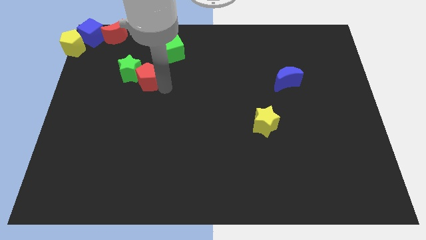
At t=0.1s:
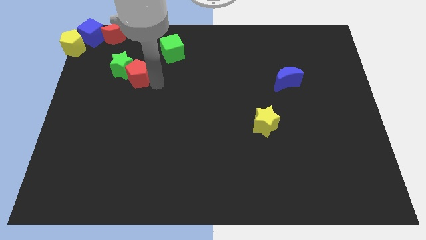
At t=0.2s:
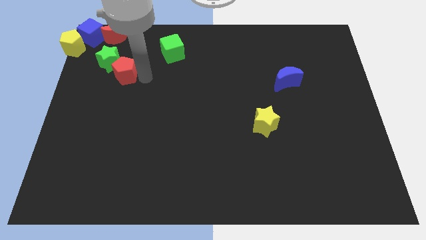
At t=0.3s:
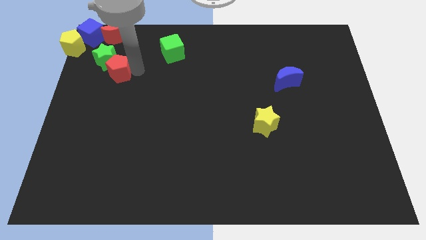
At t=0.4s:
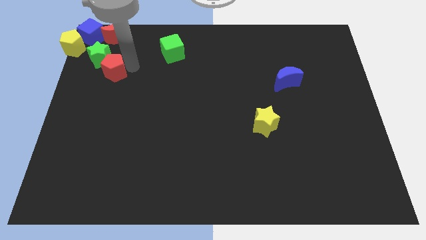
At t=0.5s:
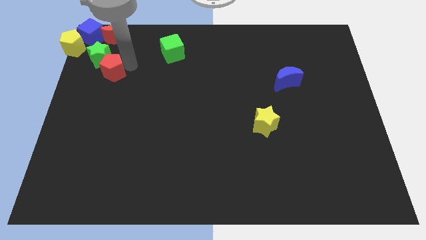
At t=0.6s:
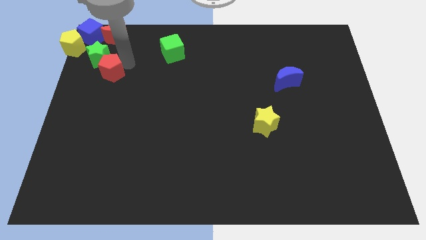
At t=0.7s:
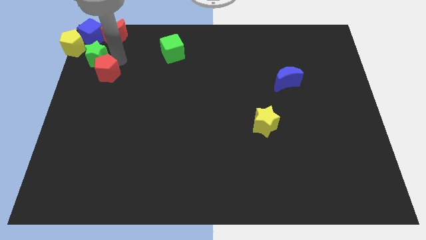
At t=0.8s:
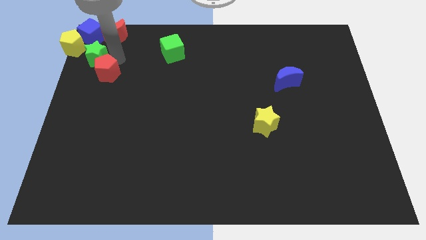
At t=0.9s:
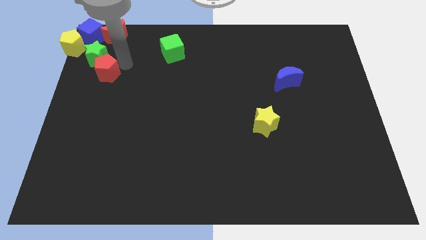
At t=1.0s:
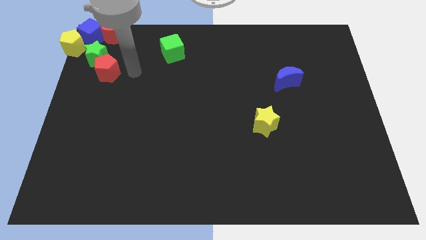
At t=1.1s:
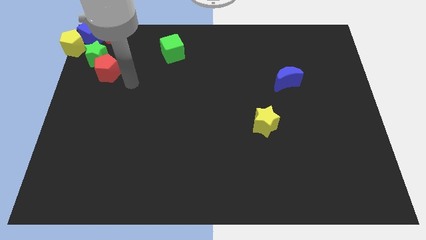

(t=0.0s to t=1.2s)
move the green star with the red pentagon towards the top left of the board

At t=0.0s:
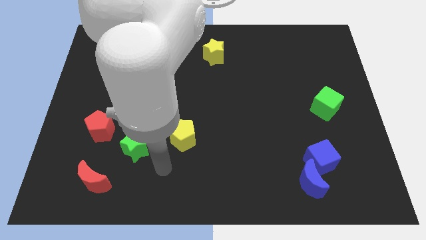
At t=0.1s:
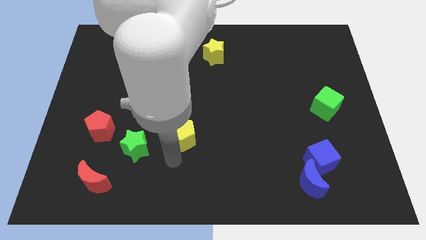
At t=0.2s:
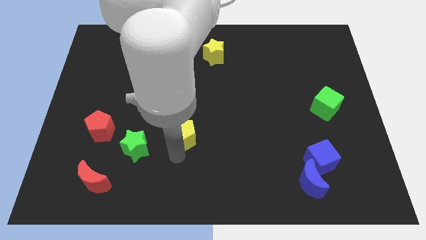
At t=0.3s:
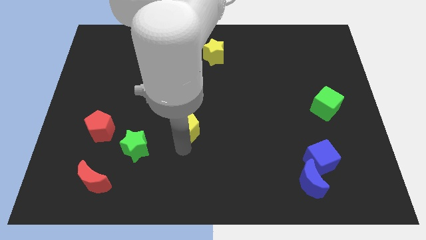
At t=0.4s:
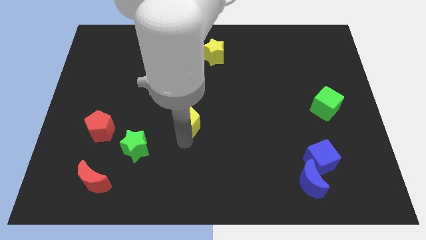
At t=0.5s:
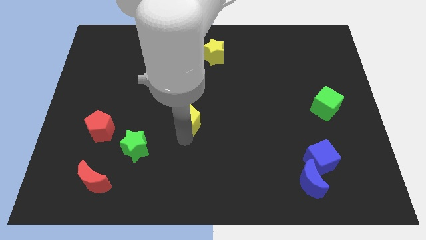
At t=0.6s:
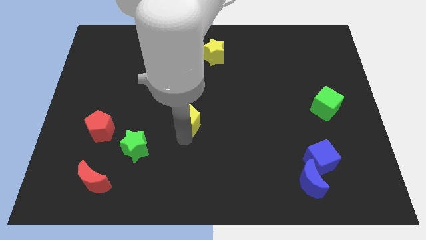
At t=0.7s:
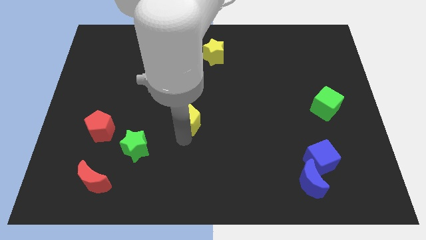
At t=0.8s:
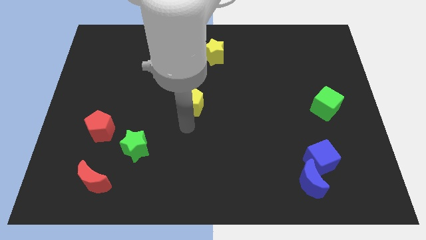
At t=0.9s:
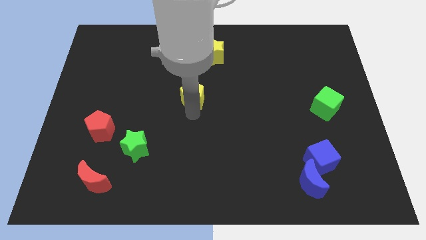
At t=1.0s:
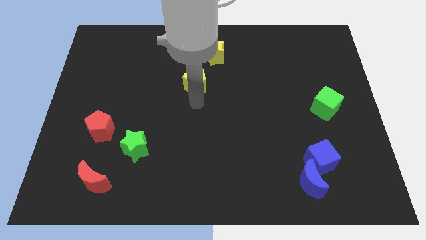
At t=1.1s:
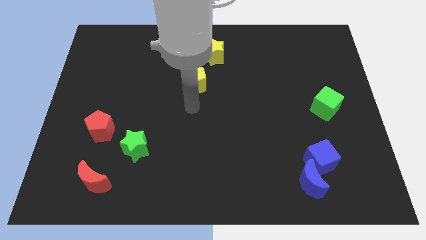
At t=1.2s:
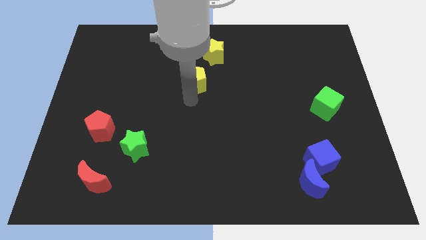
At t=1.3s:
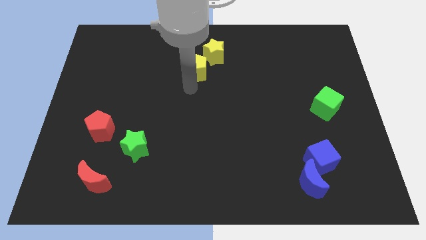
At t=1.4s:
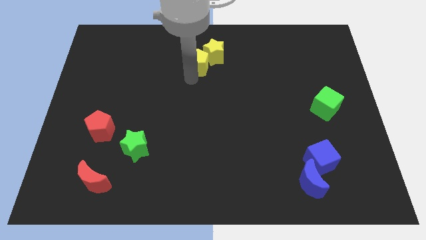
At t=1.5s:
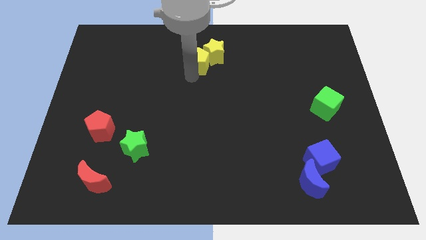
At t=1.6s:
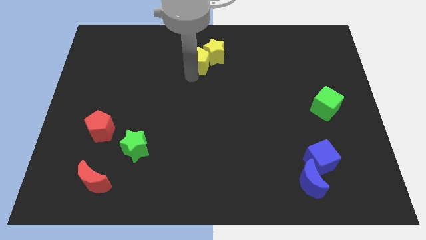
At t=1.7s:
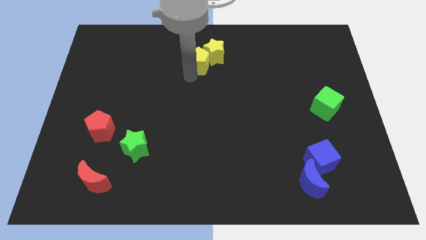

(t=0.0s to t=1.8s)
move the yellow pentagon into the yellow star

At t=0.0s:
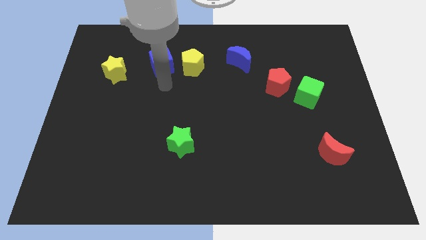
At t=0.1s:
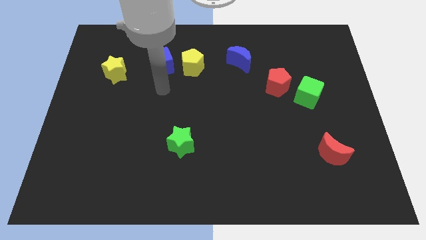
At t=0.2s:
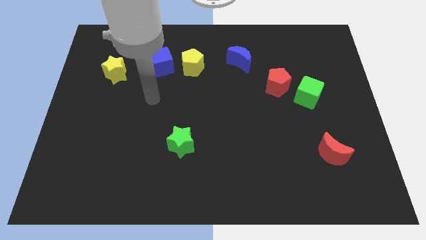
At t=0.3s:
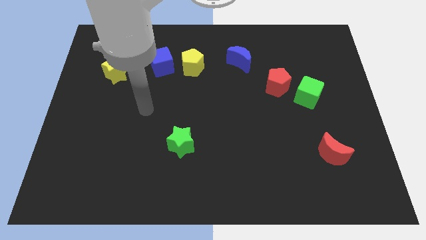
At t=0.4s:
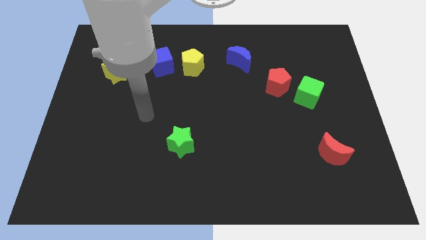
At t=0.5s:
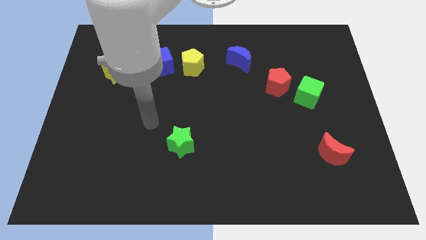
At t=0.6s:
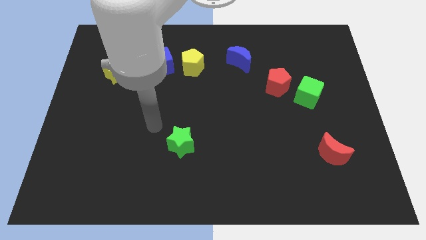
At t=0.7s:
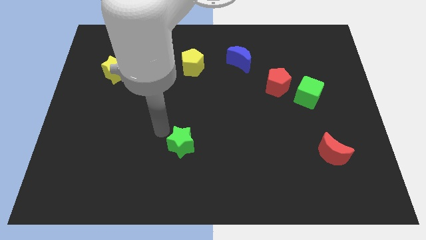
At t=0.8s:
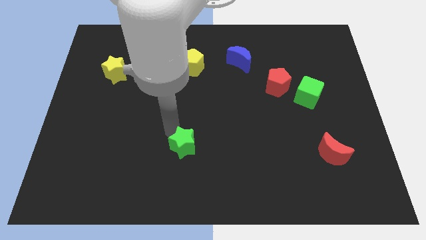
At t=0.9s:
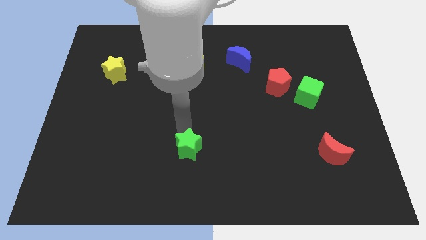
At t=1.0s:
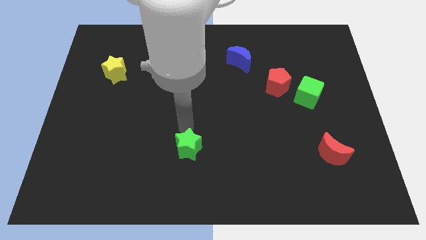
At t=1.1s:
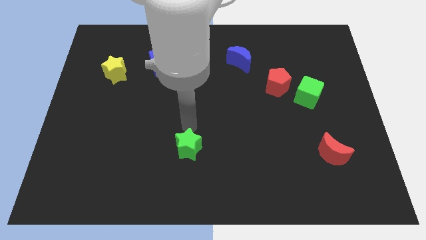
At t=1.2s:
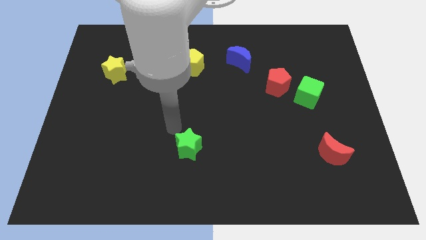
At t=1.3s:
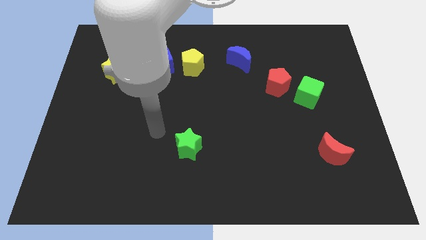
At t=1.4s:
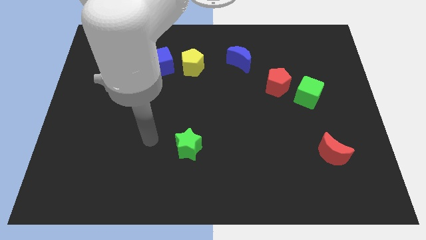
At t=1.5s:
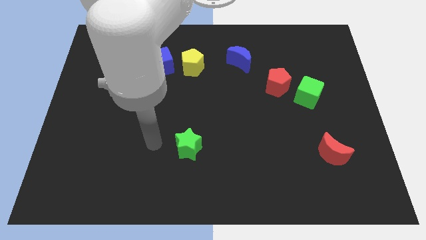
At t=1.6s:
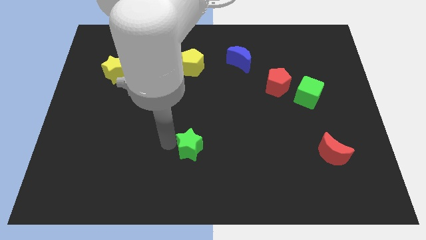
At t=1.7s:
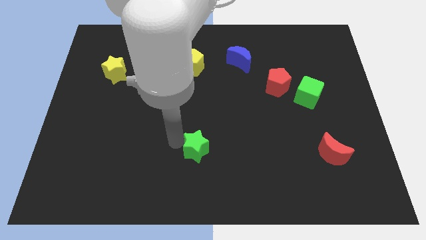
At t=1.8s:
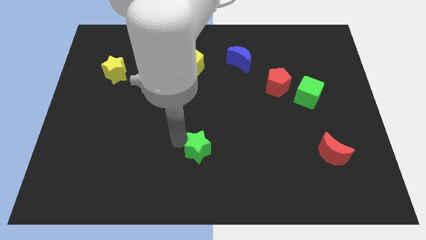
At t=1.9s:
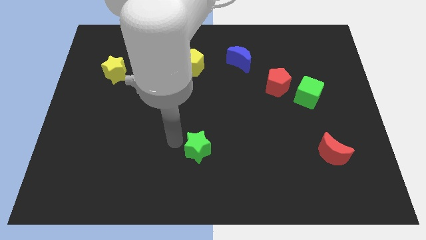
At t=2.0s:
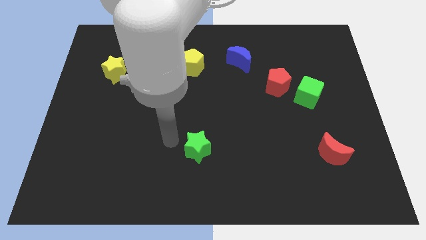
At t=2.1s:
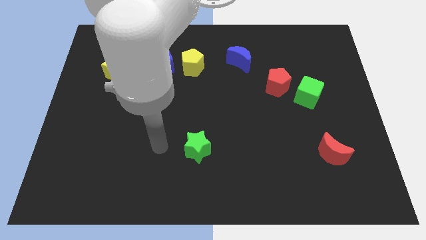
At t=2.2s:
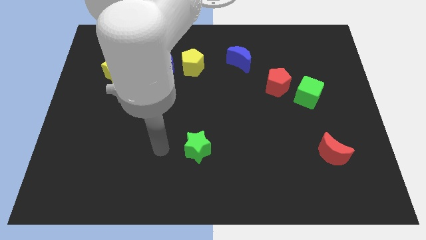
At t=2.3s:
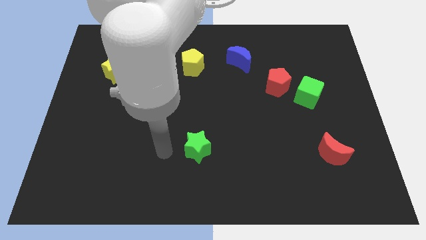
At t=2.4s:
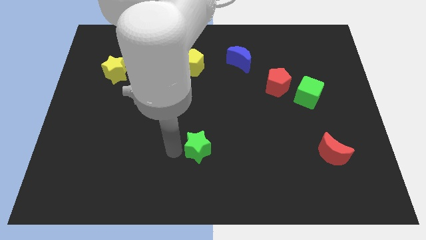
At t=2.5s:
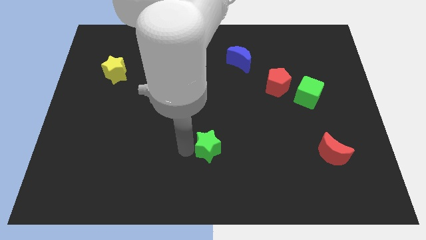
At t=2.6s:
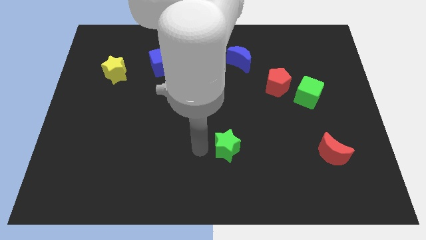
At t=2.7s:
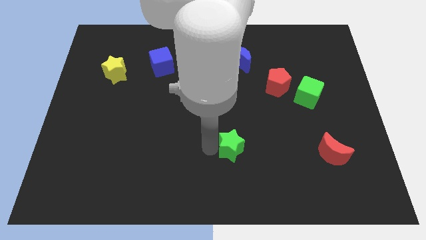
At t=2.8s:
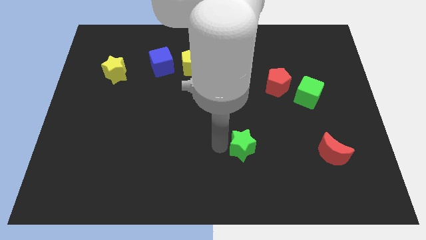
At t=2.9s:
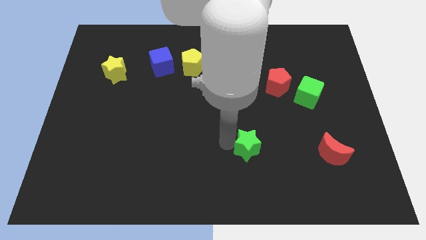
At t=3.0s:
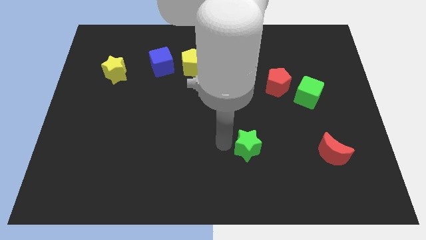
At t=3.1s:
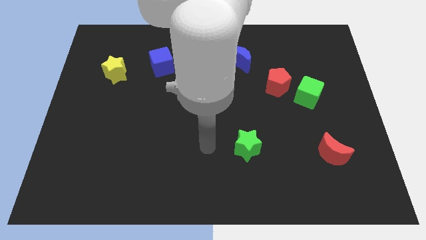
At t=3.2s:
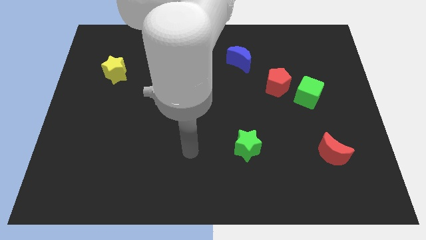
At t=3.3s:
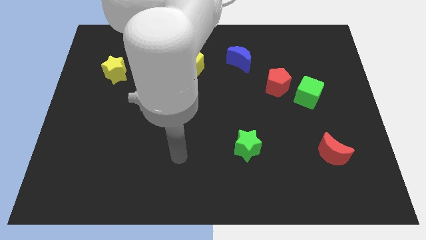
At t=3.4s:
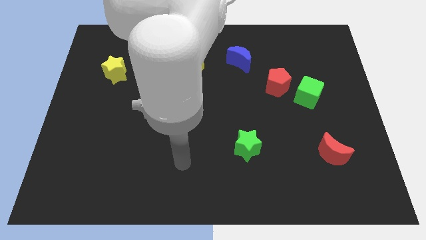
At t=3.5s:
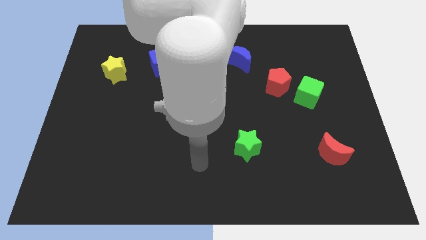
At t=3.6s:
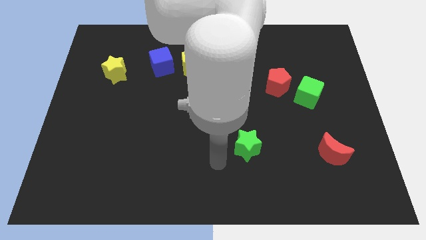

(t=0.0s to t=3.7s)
move the green star to the left of the red moon

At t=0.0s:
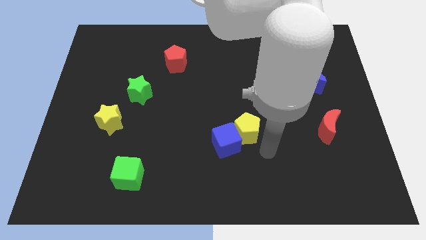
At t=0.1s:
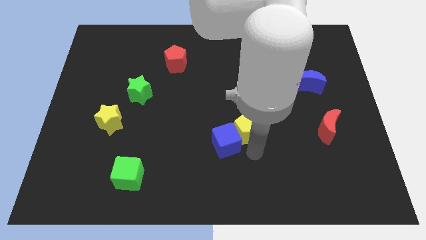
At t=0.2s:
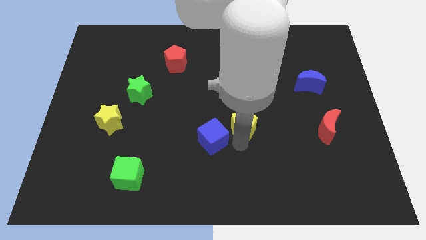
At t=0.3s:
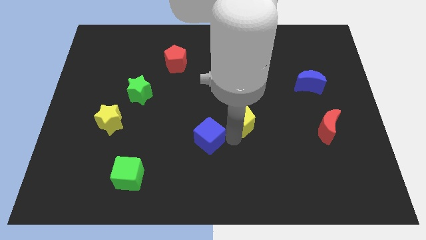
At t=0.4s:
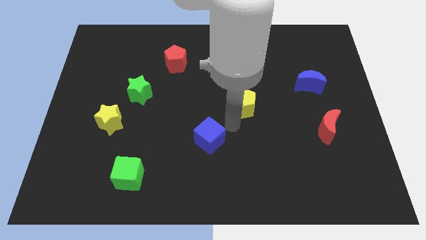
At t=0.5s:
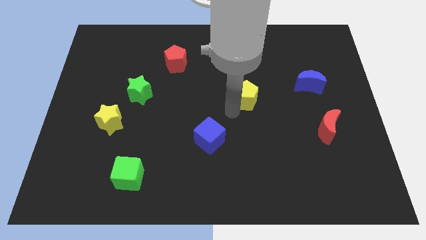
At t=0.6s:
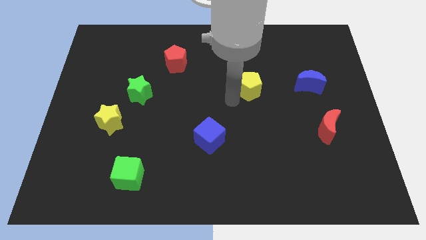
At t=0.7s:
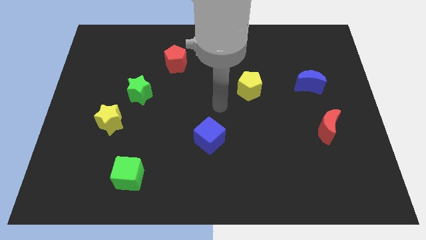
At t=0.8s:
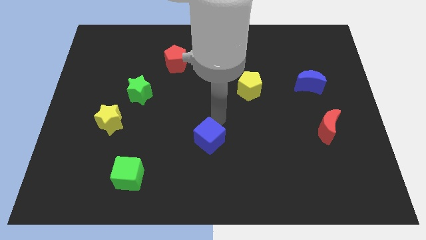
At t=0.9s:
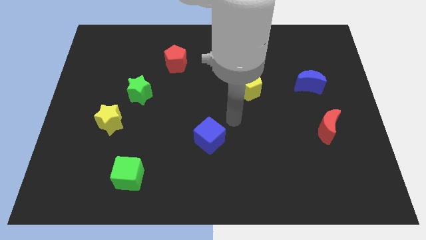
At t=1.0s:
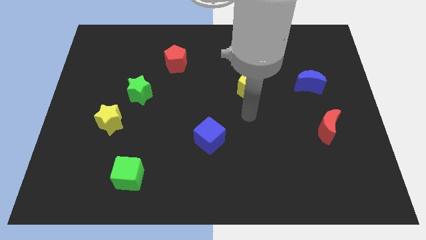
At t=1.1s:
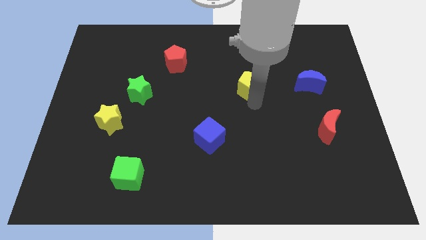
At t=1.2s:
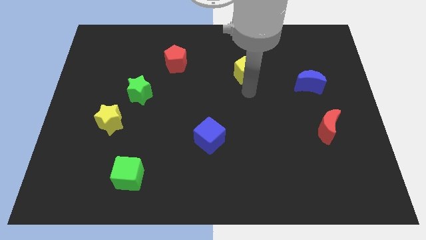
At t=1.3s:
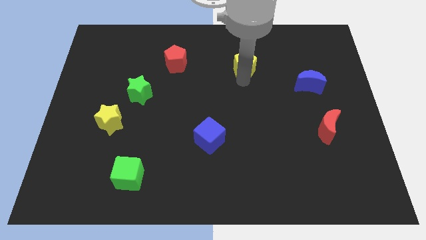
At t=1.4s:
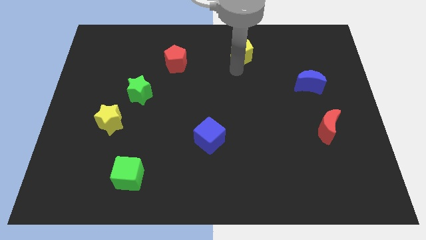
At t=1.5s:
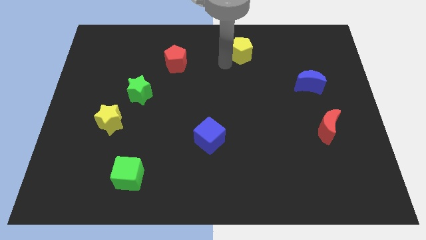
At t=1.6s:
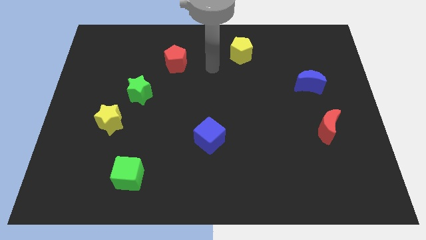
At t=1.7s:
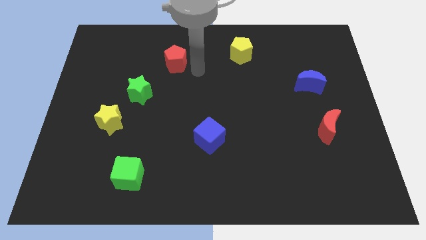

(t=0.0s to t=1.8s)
move the yellow pentagon towards the top center of the board

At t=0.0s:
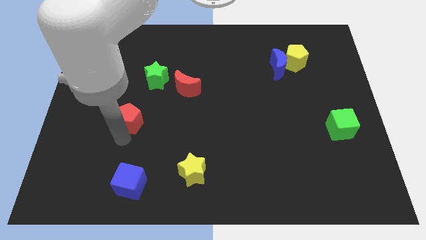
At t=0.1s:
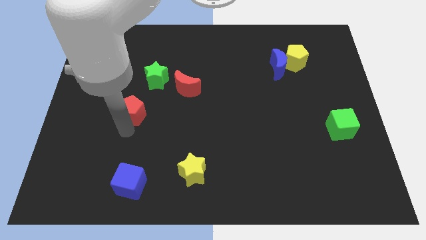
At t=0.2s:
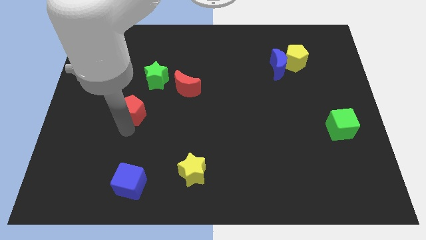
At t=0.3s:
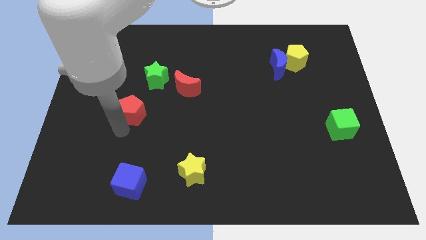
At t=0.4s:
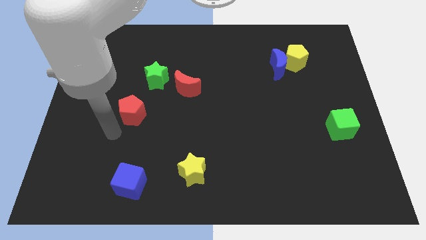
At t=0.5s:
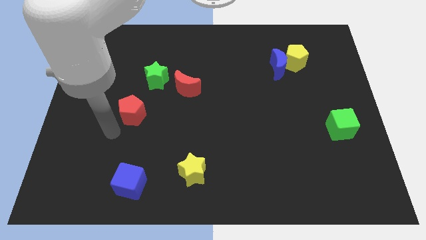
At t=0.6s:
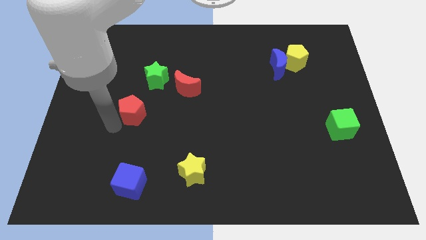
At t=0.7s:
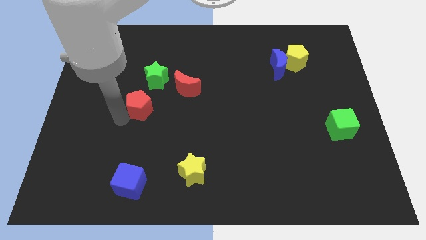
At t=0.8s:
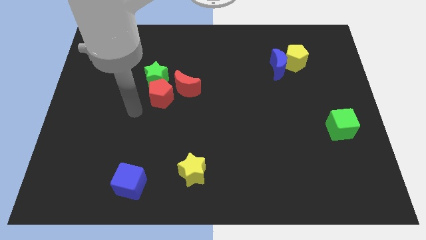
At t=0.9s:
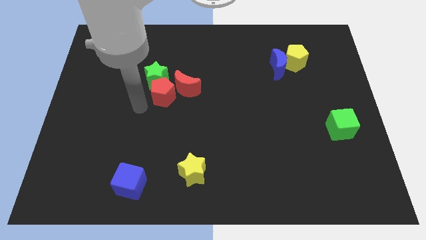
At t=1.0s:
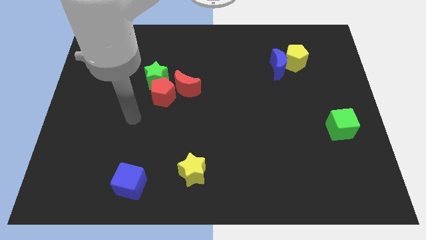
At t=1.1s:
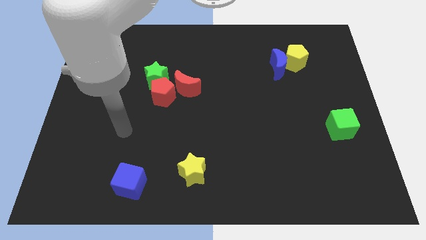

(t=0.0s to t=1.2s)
place the red pentagon below the green star
